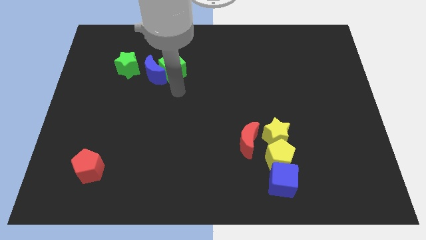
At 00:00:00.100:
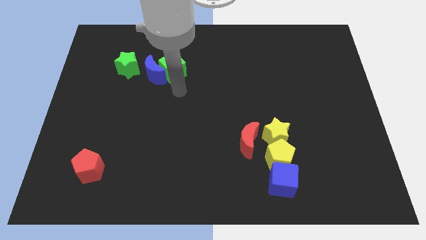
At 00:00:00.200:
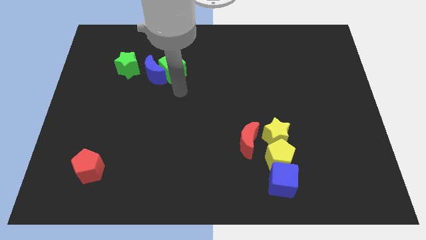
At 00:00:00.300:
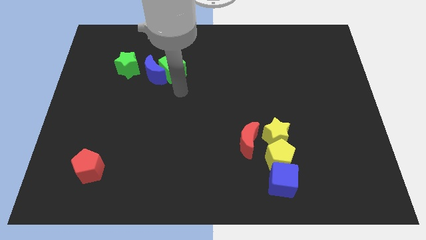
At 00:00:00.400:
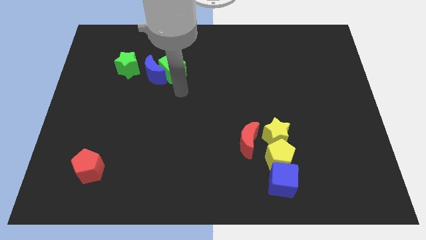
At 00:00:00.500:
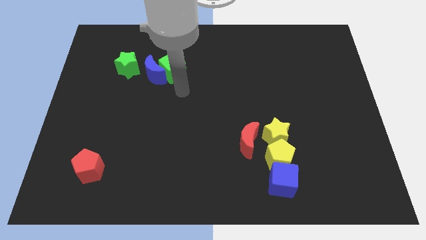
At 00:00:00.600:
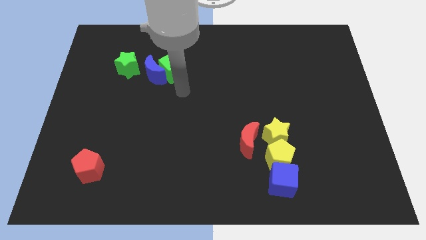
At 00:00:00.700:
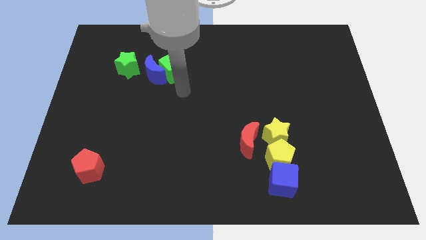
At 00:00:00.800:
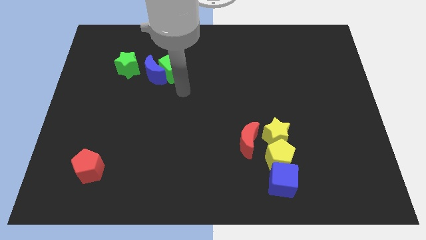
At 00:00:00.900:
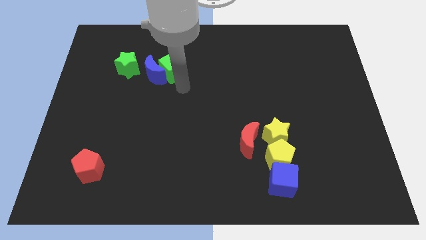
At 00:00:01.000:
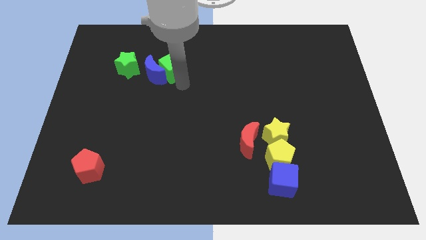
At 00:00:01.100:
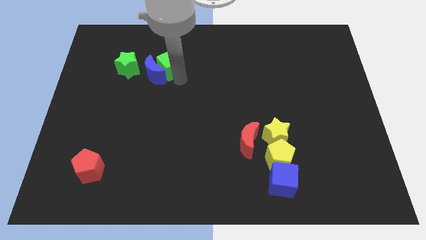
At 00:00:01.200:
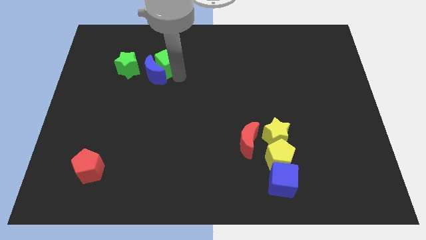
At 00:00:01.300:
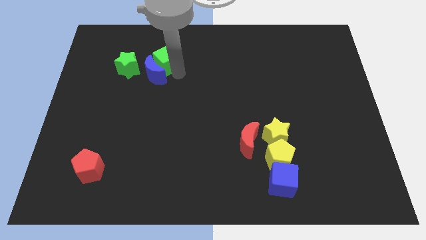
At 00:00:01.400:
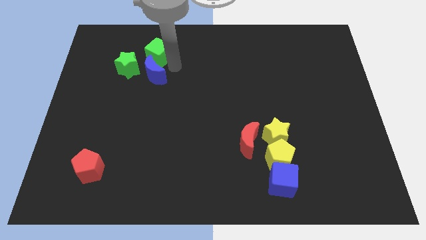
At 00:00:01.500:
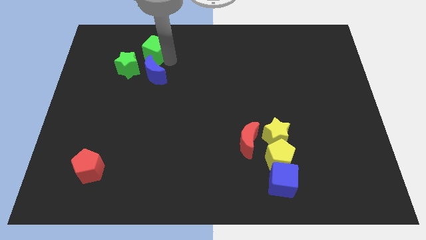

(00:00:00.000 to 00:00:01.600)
push the green cube on top of blue crescent

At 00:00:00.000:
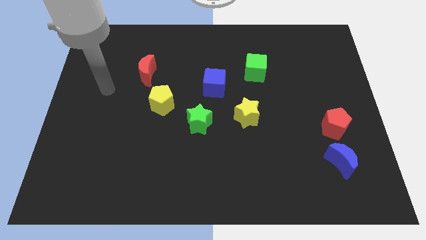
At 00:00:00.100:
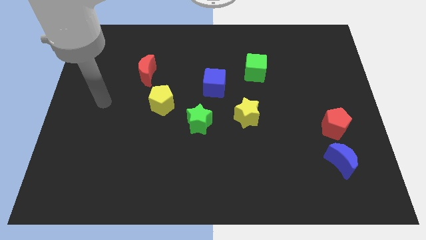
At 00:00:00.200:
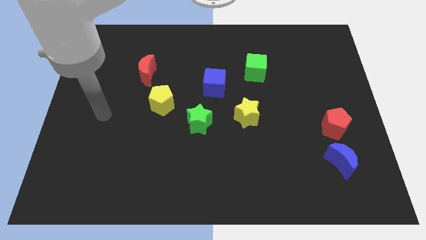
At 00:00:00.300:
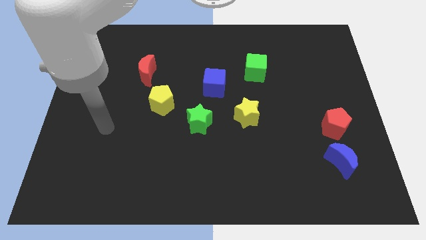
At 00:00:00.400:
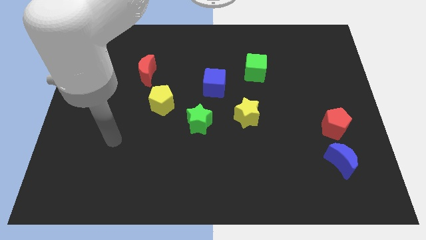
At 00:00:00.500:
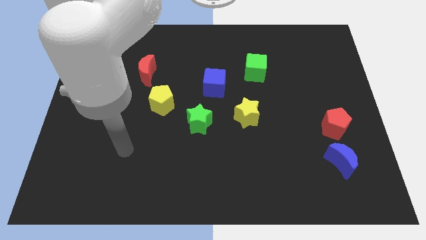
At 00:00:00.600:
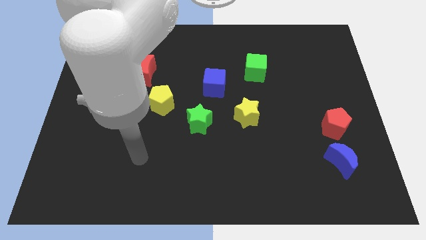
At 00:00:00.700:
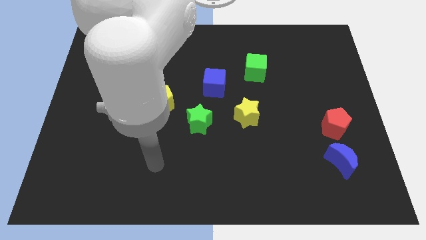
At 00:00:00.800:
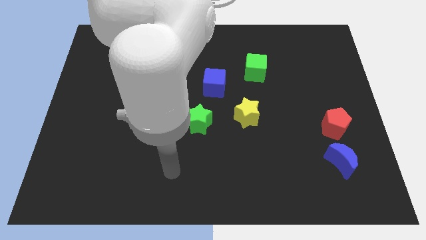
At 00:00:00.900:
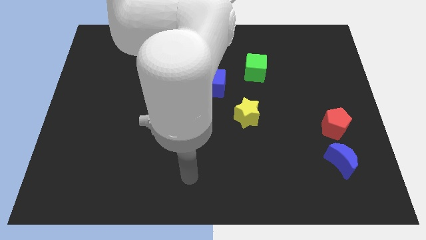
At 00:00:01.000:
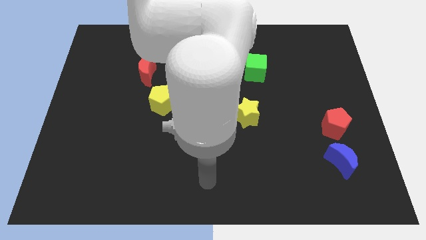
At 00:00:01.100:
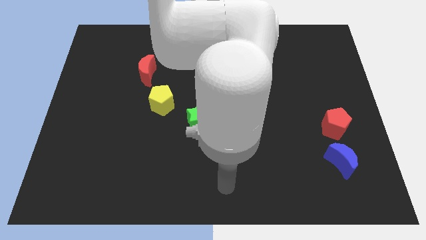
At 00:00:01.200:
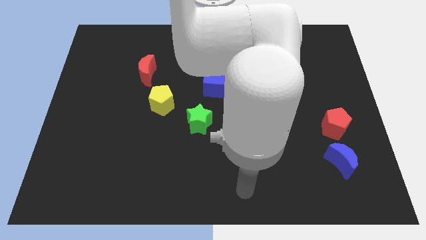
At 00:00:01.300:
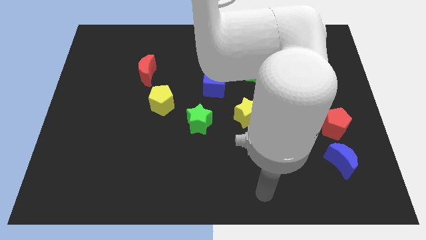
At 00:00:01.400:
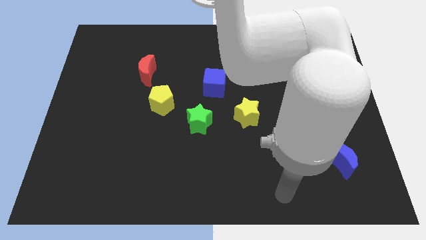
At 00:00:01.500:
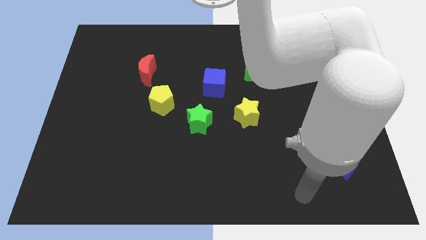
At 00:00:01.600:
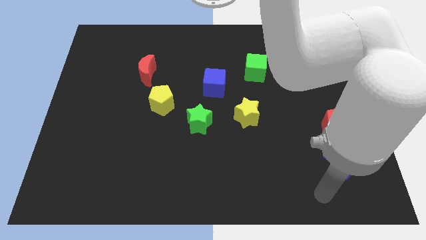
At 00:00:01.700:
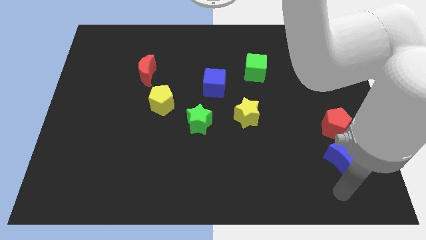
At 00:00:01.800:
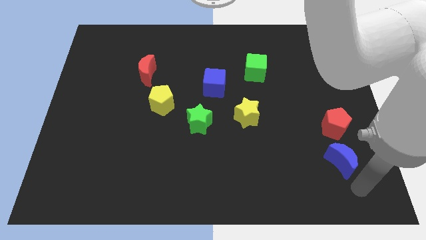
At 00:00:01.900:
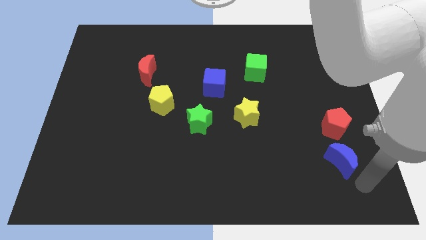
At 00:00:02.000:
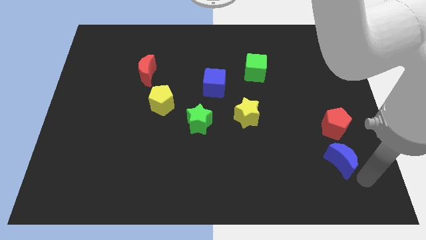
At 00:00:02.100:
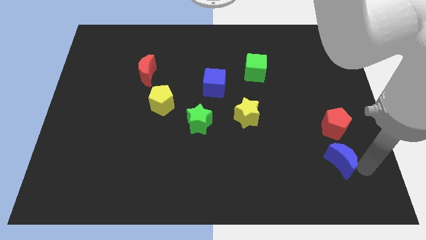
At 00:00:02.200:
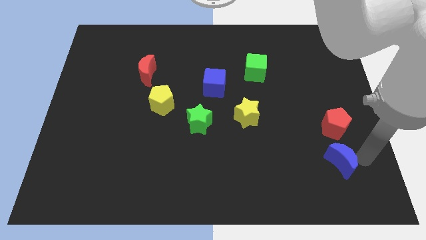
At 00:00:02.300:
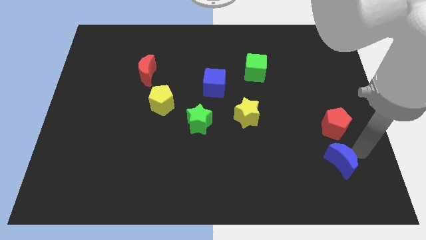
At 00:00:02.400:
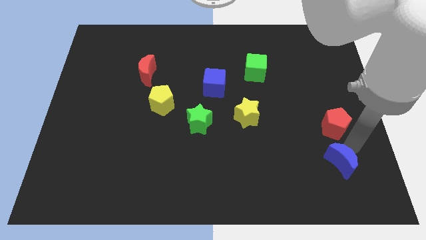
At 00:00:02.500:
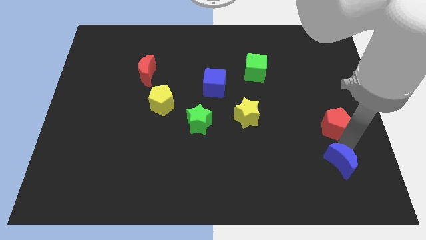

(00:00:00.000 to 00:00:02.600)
point your arm at the bottom of the red pentagon

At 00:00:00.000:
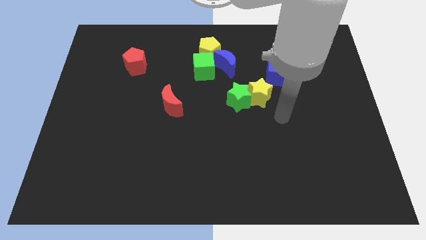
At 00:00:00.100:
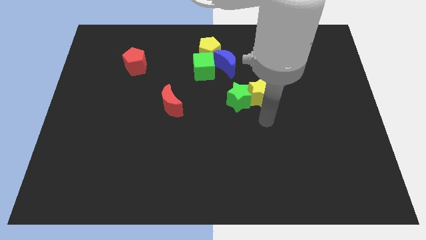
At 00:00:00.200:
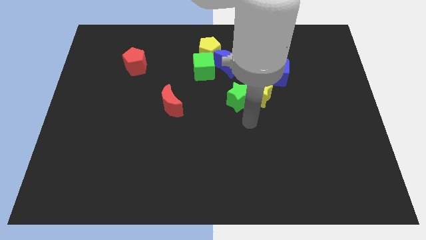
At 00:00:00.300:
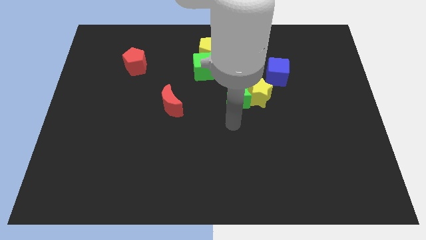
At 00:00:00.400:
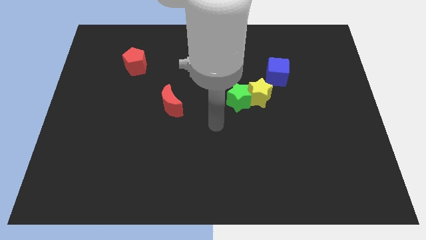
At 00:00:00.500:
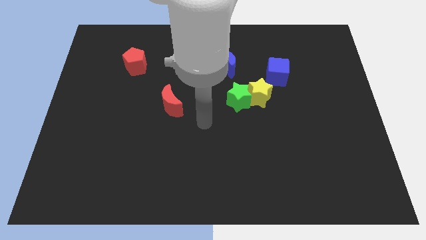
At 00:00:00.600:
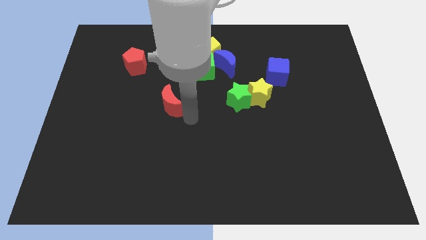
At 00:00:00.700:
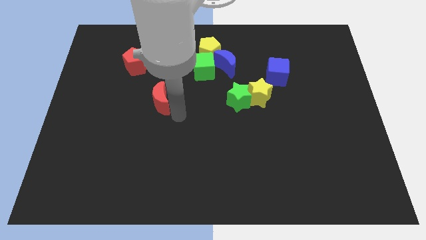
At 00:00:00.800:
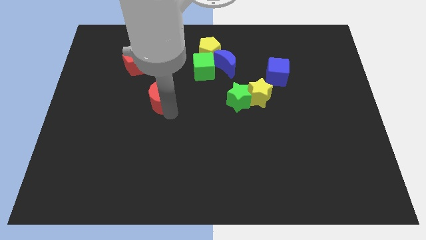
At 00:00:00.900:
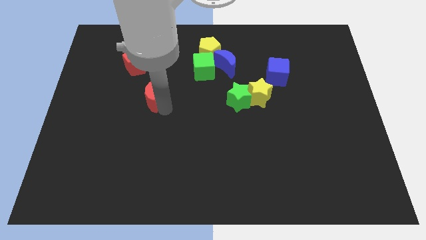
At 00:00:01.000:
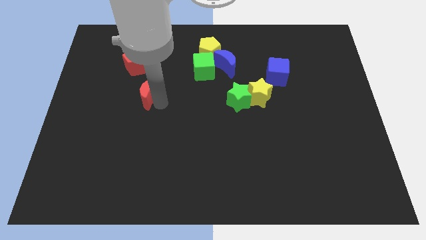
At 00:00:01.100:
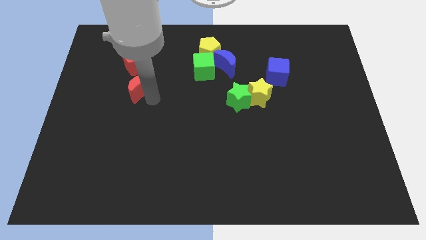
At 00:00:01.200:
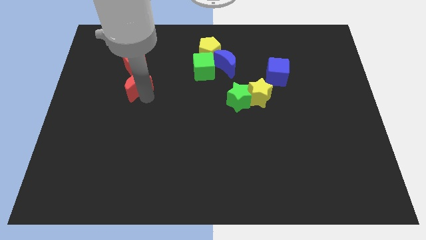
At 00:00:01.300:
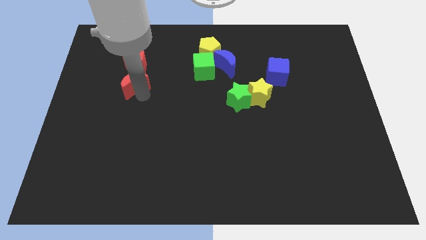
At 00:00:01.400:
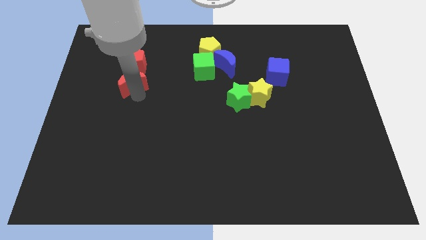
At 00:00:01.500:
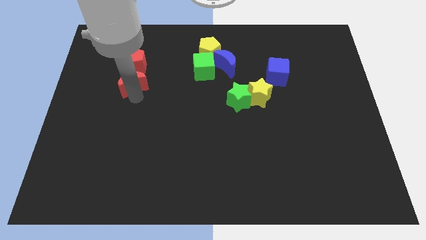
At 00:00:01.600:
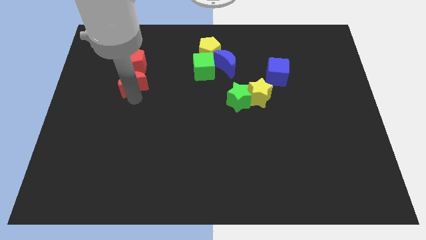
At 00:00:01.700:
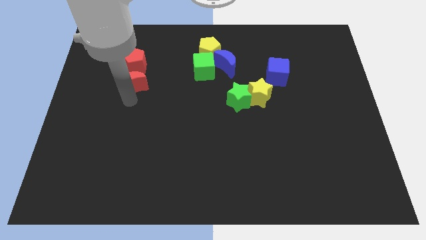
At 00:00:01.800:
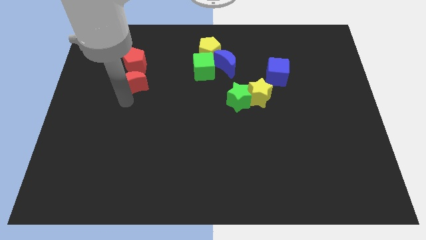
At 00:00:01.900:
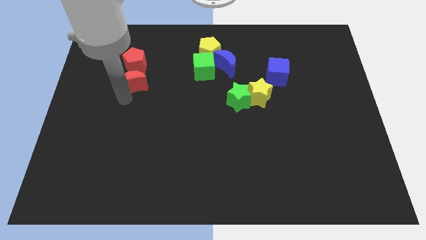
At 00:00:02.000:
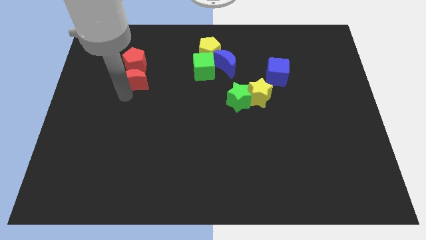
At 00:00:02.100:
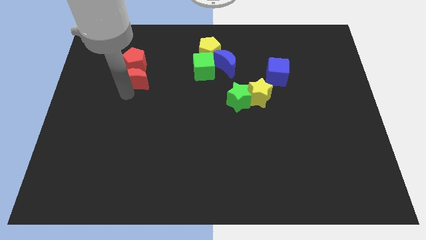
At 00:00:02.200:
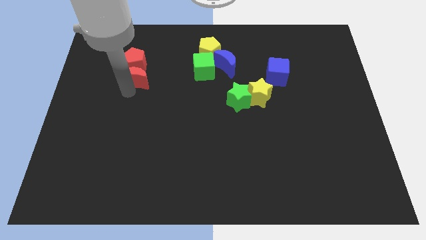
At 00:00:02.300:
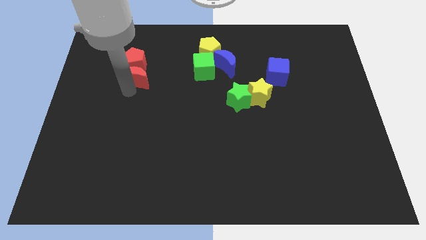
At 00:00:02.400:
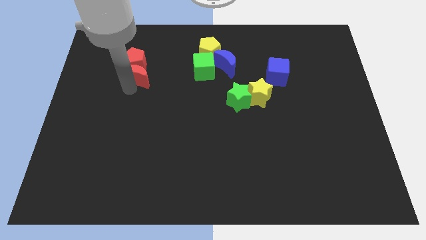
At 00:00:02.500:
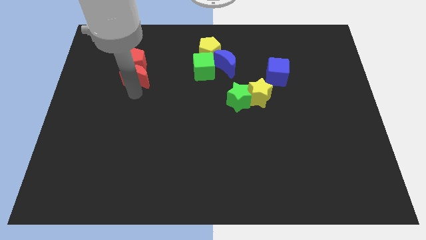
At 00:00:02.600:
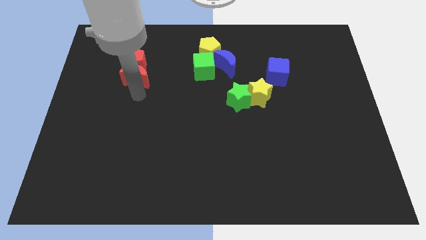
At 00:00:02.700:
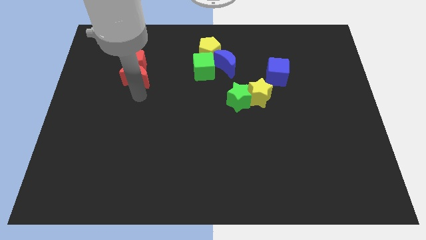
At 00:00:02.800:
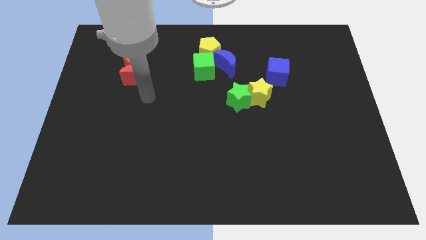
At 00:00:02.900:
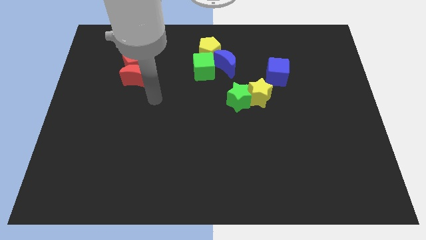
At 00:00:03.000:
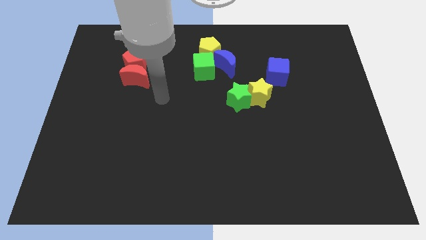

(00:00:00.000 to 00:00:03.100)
place the red moon down to the red pentagon

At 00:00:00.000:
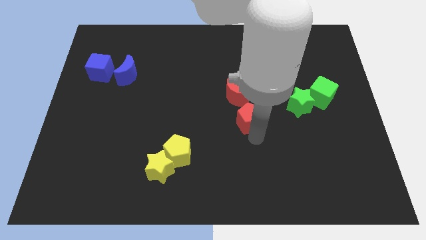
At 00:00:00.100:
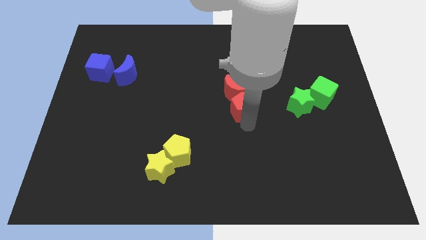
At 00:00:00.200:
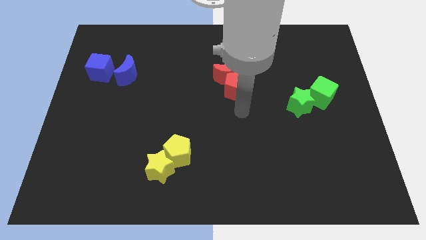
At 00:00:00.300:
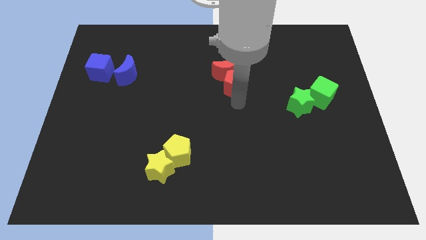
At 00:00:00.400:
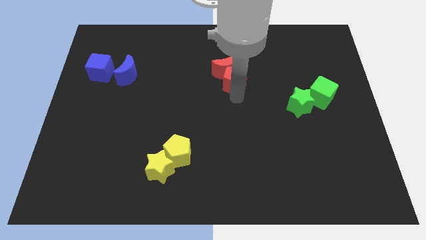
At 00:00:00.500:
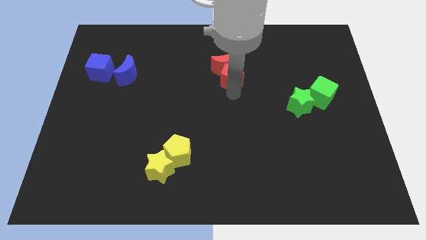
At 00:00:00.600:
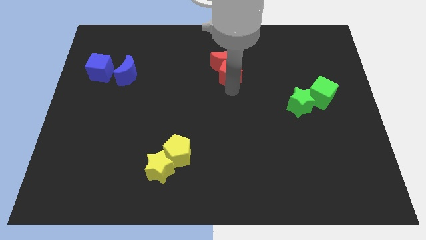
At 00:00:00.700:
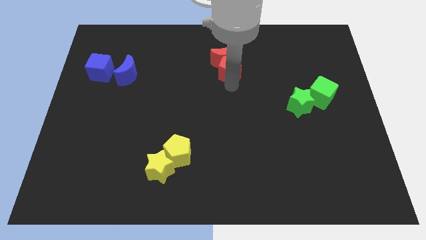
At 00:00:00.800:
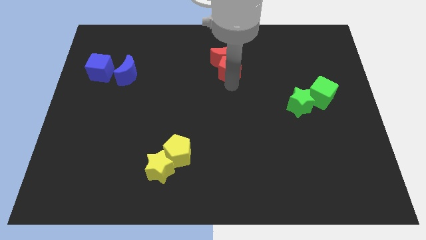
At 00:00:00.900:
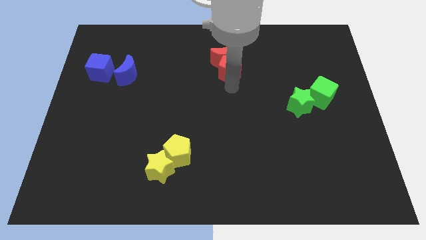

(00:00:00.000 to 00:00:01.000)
push the red pentagon and red moon to the top center of the board

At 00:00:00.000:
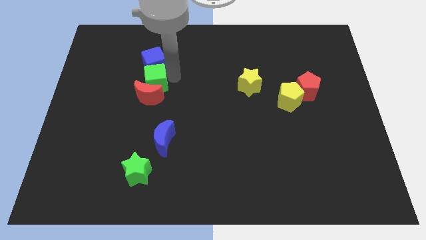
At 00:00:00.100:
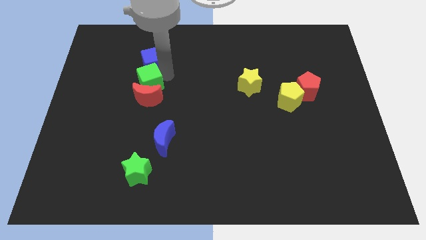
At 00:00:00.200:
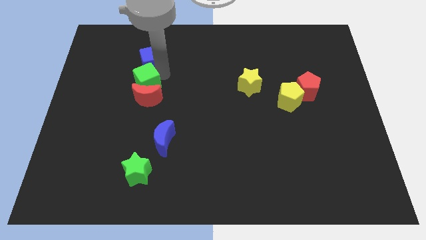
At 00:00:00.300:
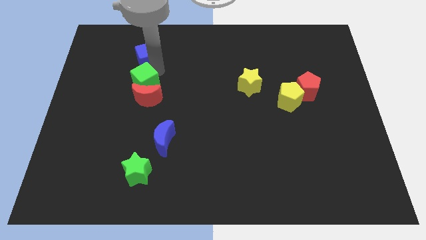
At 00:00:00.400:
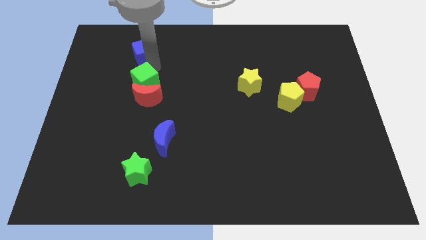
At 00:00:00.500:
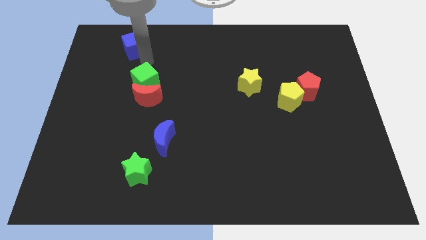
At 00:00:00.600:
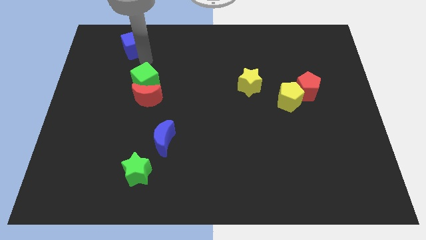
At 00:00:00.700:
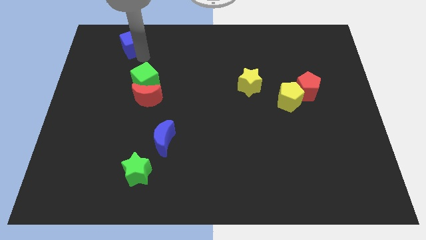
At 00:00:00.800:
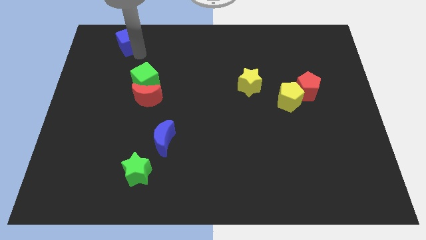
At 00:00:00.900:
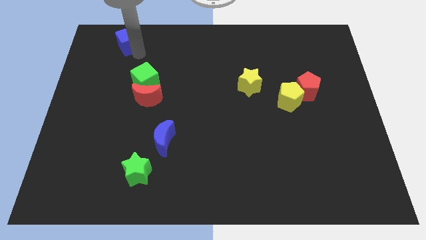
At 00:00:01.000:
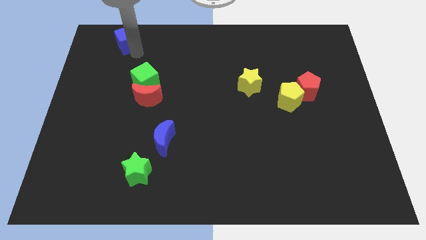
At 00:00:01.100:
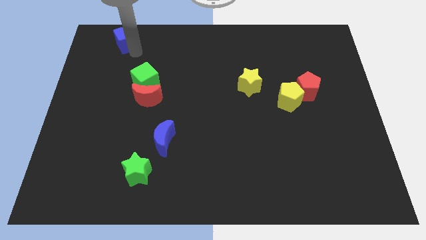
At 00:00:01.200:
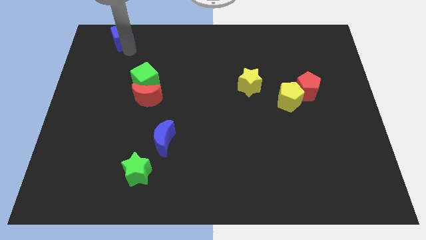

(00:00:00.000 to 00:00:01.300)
separate the blue cube from the green cube
